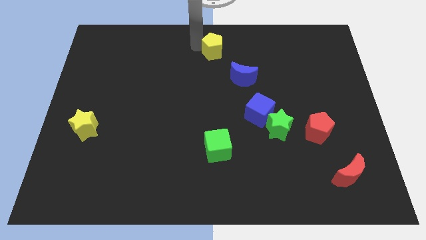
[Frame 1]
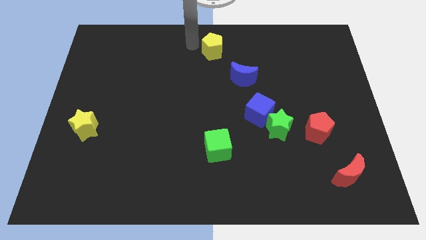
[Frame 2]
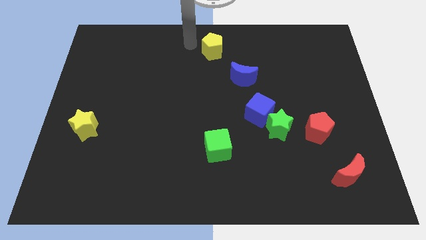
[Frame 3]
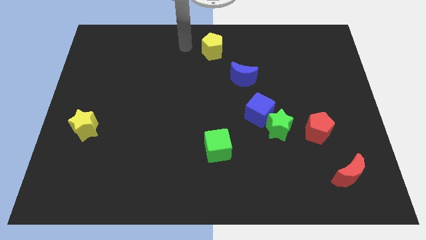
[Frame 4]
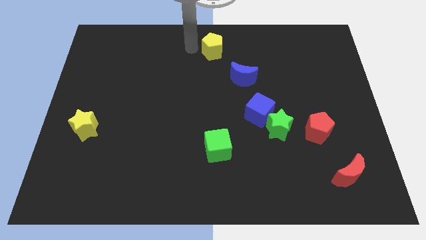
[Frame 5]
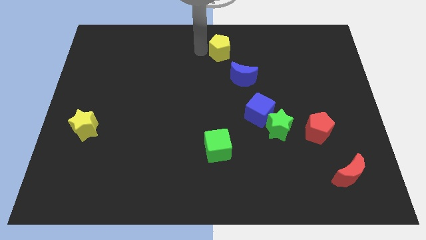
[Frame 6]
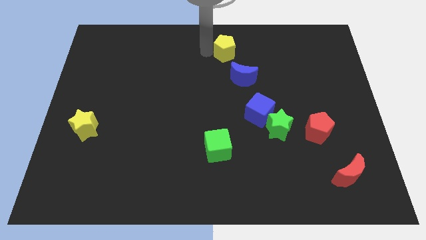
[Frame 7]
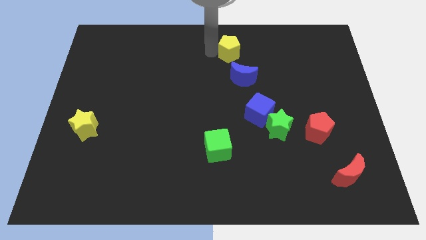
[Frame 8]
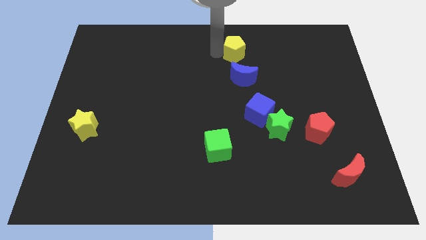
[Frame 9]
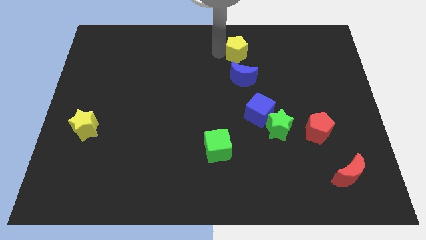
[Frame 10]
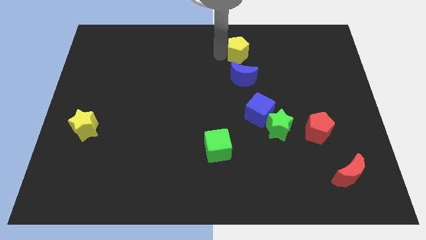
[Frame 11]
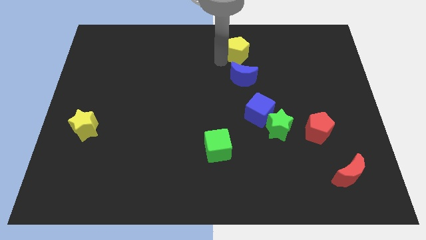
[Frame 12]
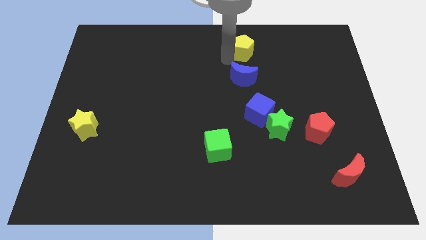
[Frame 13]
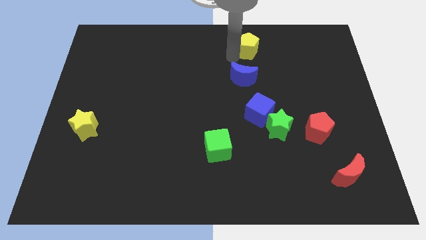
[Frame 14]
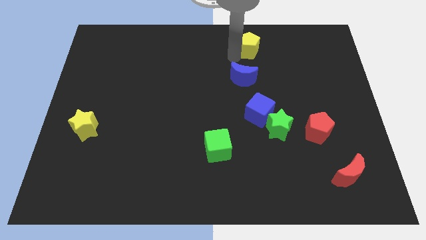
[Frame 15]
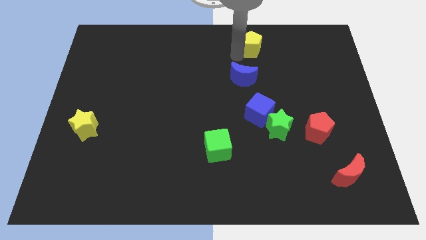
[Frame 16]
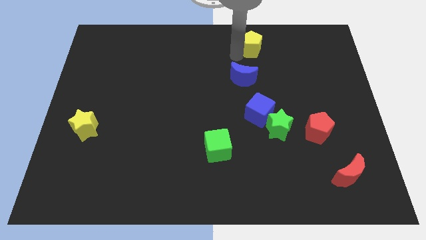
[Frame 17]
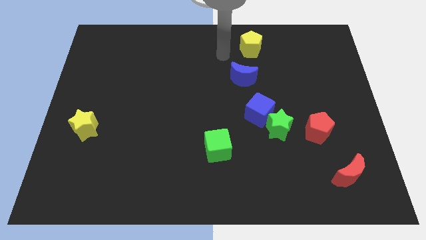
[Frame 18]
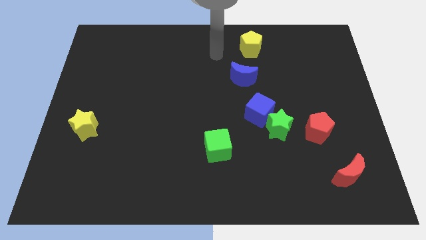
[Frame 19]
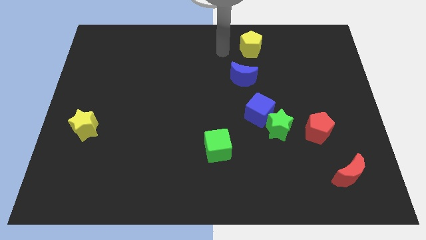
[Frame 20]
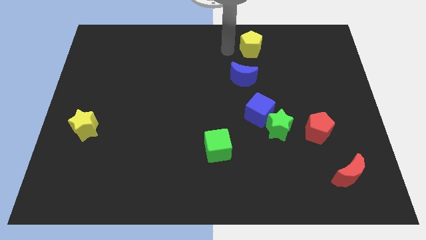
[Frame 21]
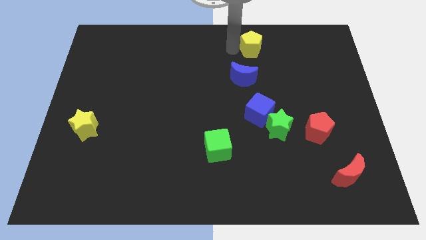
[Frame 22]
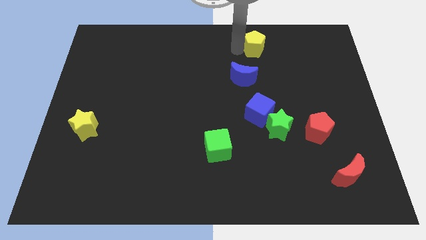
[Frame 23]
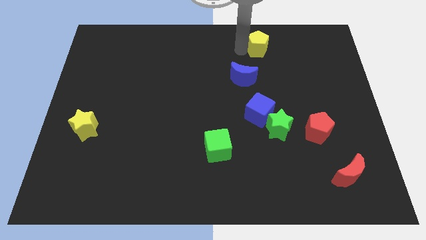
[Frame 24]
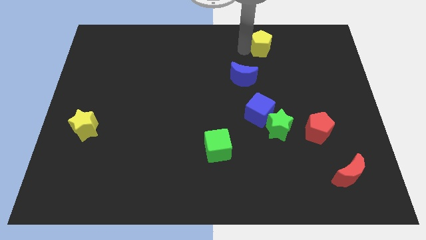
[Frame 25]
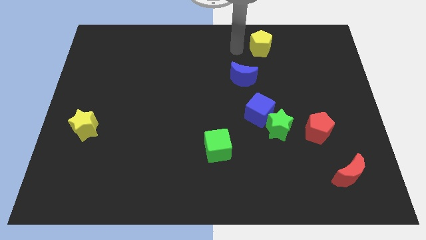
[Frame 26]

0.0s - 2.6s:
move the yellow pentagon towards the top right

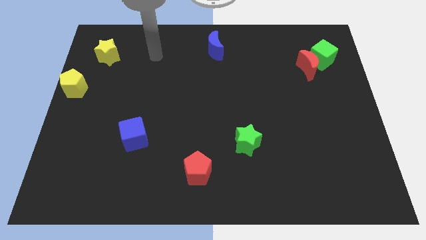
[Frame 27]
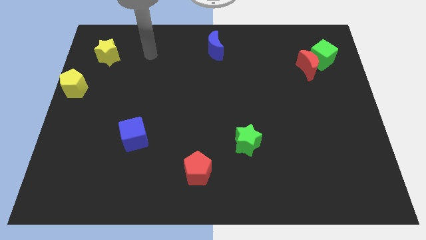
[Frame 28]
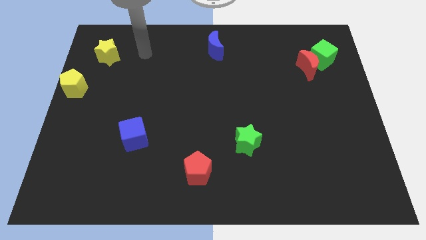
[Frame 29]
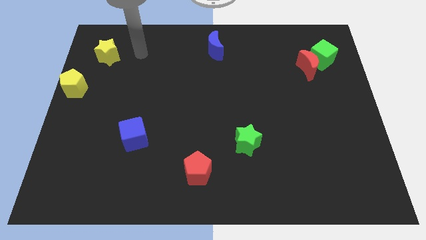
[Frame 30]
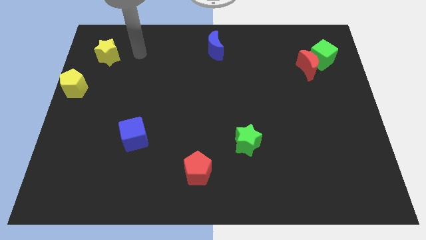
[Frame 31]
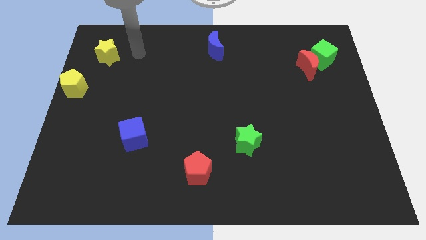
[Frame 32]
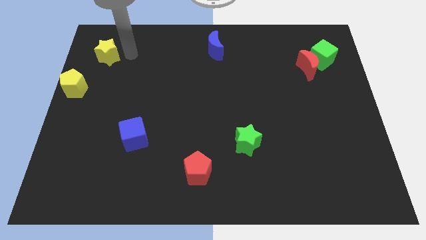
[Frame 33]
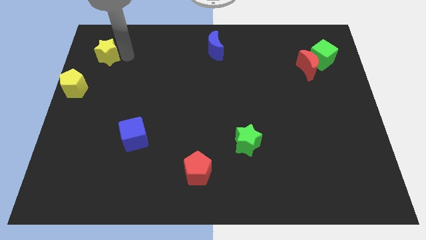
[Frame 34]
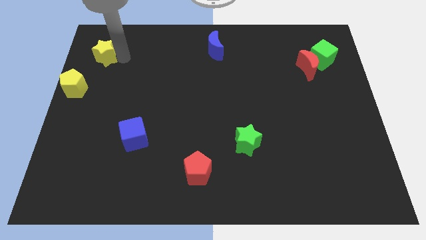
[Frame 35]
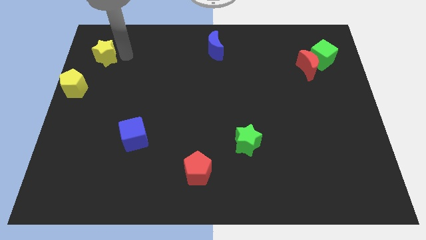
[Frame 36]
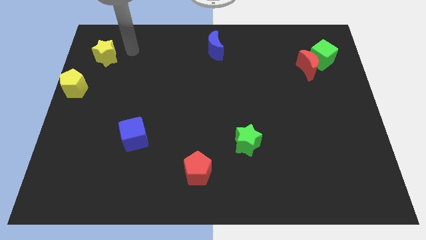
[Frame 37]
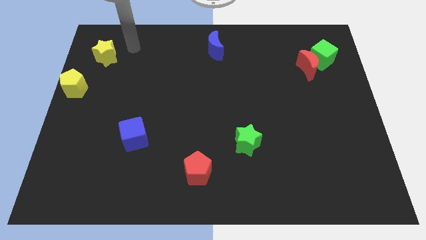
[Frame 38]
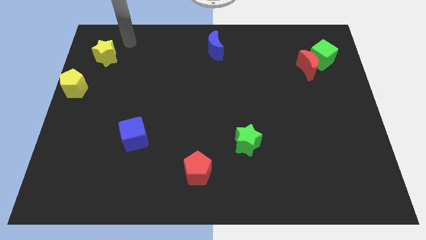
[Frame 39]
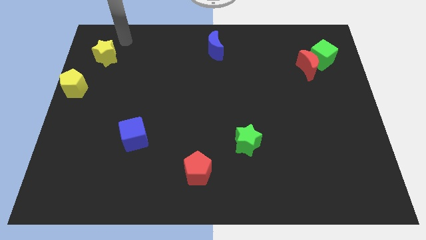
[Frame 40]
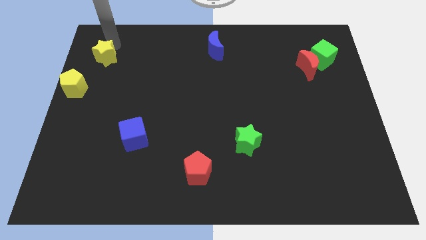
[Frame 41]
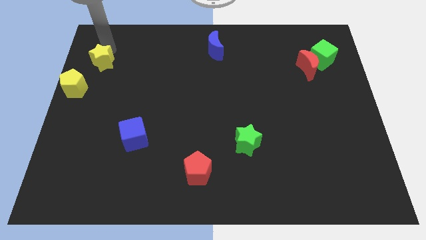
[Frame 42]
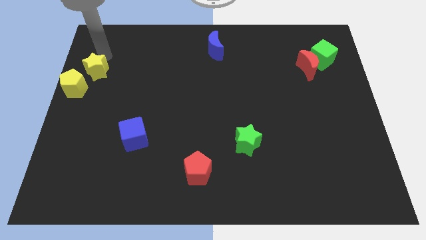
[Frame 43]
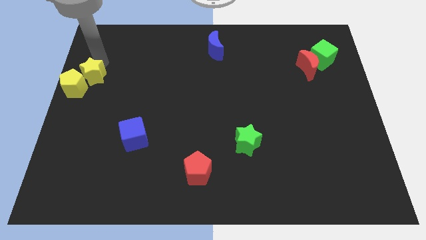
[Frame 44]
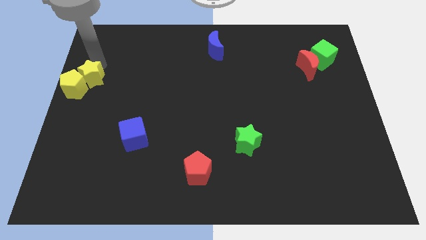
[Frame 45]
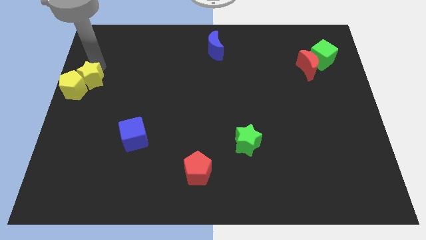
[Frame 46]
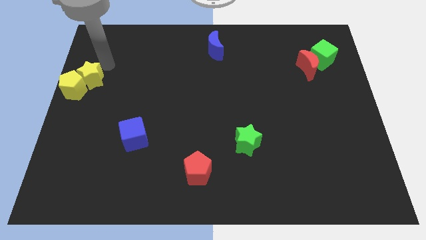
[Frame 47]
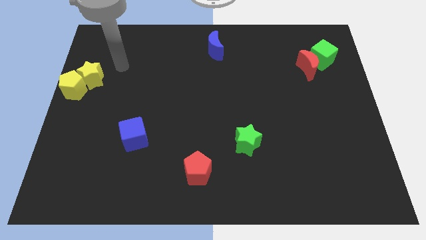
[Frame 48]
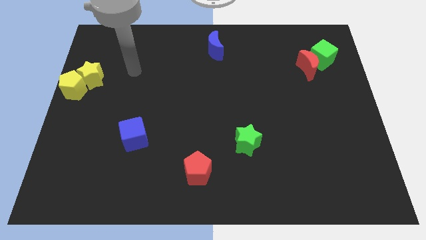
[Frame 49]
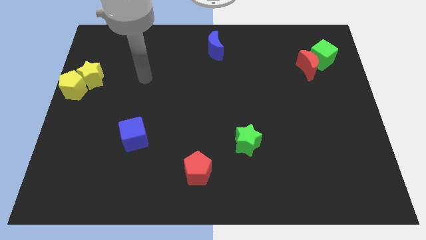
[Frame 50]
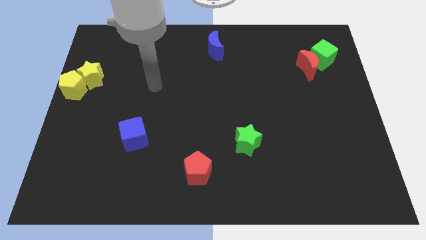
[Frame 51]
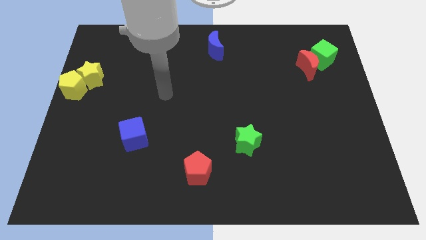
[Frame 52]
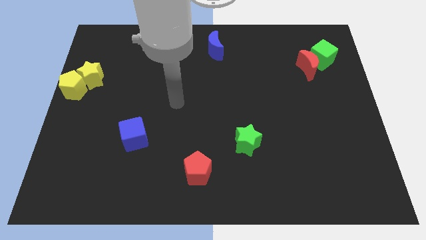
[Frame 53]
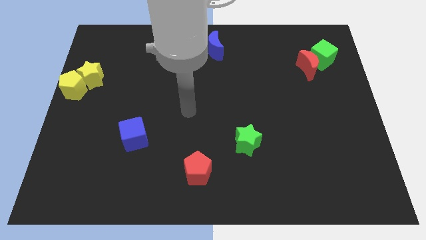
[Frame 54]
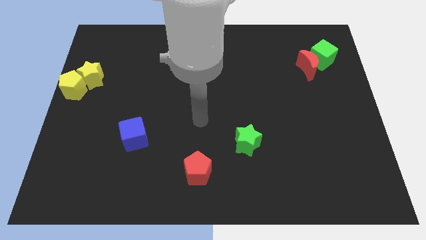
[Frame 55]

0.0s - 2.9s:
push yellow star into yellow pentagon

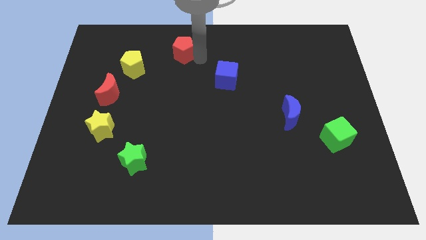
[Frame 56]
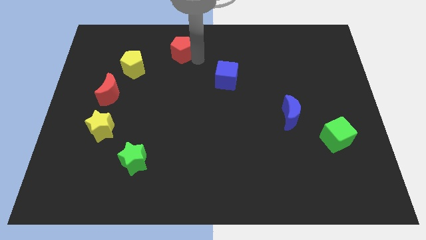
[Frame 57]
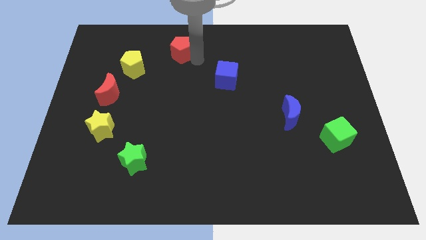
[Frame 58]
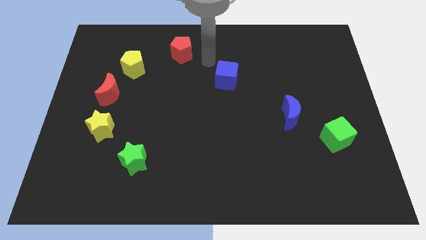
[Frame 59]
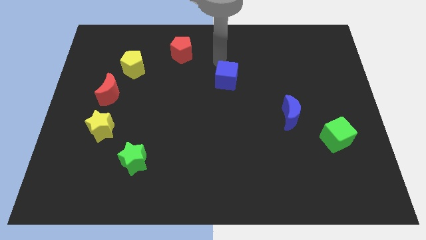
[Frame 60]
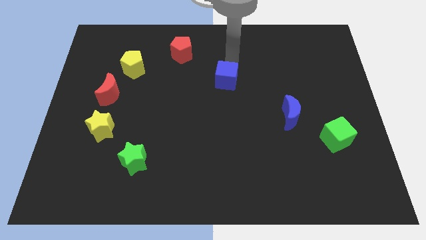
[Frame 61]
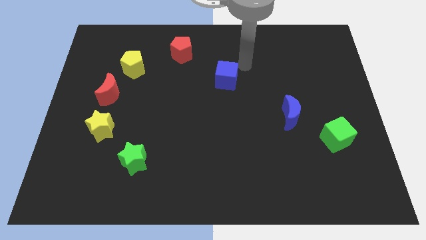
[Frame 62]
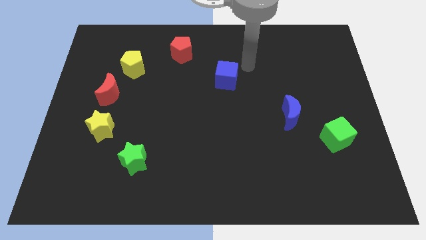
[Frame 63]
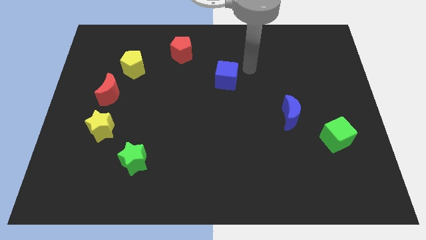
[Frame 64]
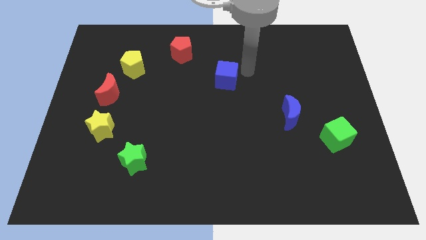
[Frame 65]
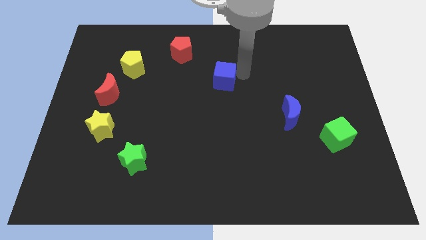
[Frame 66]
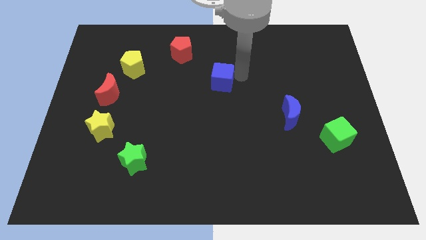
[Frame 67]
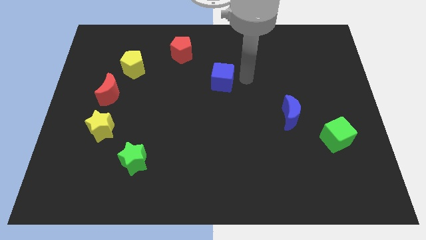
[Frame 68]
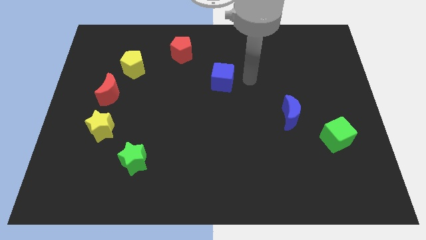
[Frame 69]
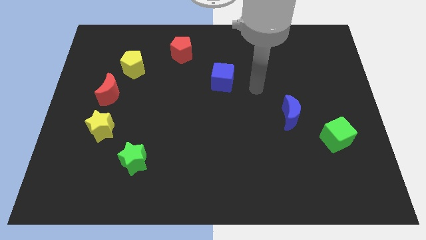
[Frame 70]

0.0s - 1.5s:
slightly touch the right side of blue cube

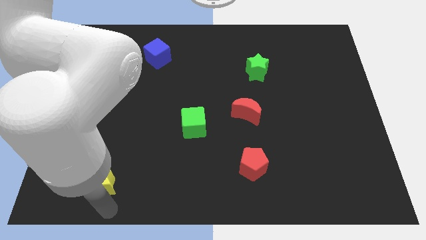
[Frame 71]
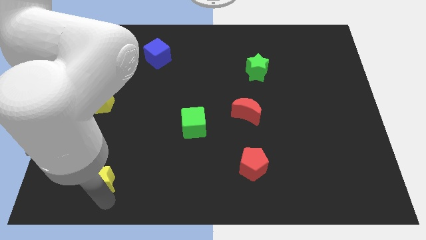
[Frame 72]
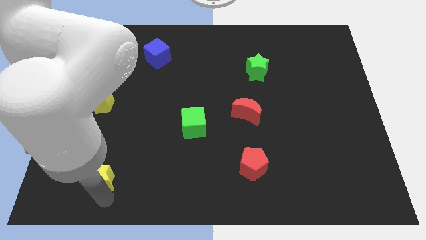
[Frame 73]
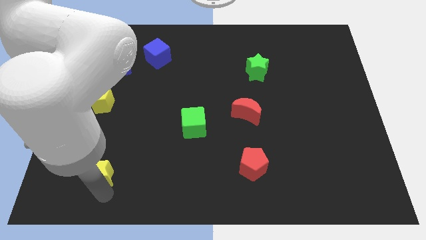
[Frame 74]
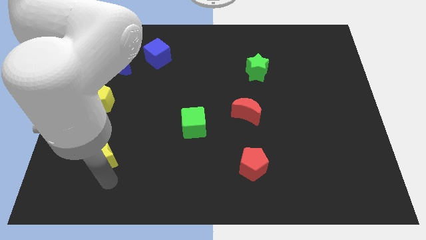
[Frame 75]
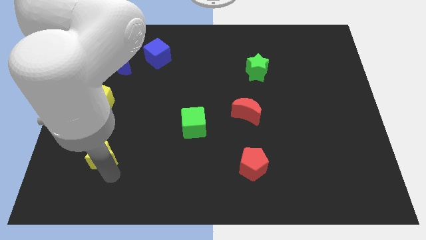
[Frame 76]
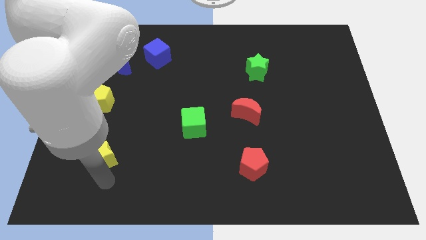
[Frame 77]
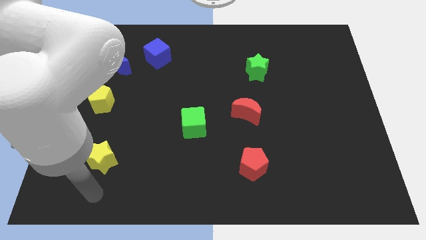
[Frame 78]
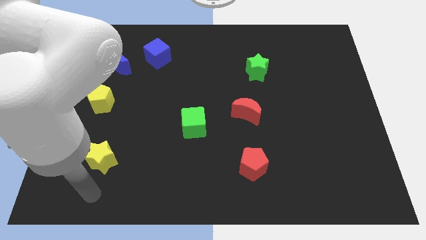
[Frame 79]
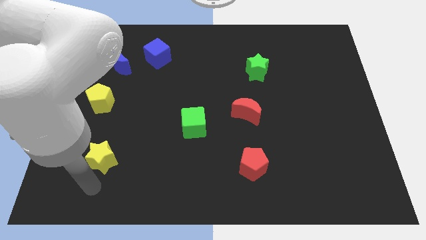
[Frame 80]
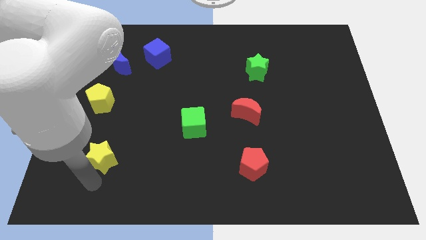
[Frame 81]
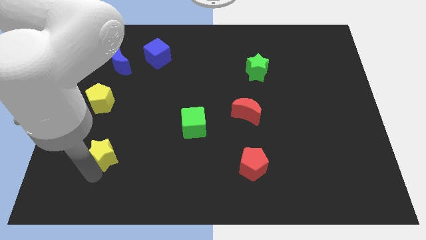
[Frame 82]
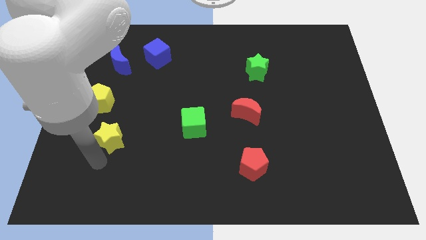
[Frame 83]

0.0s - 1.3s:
move the yellow star towards yellow pentagon

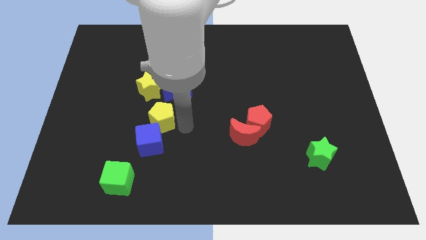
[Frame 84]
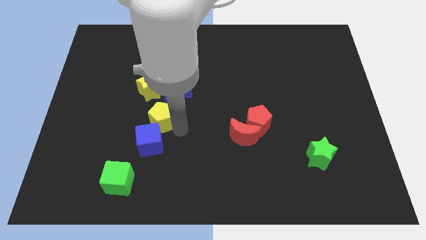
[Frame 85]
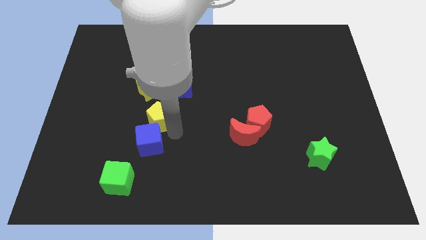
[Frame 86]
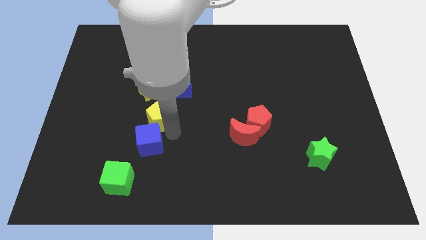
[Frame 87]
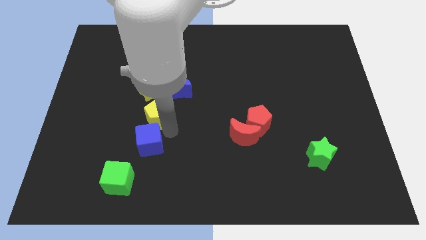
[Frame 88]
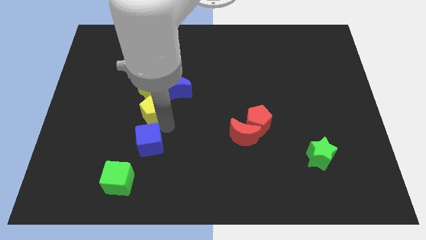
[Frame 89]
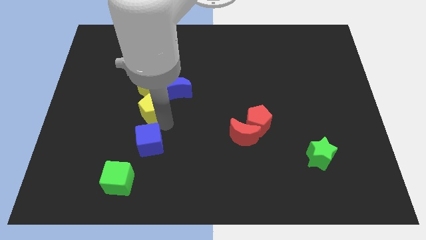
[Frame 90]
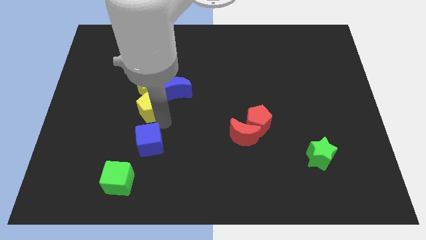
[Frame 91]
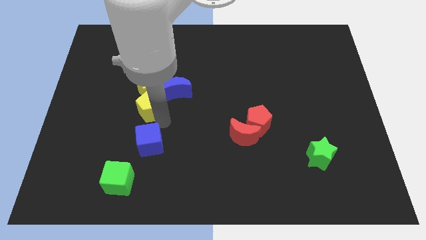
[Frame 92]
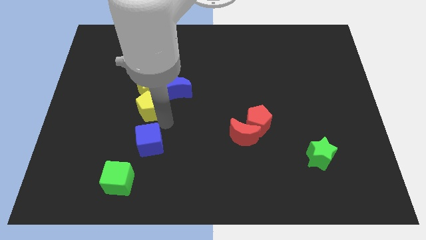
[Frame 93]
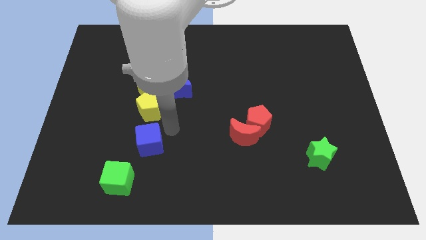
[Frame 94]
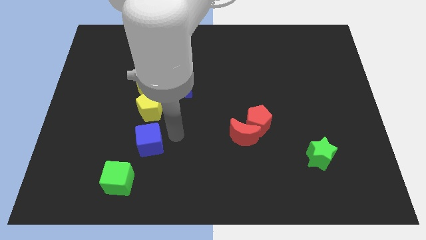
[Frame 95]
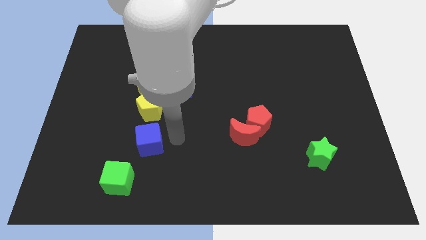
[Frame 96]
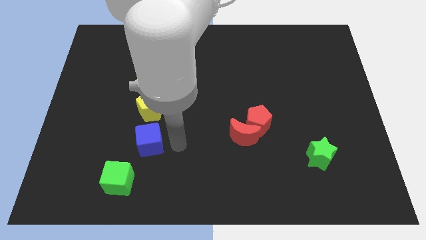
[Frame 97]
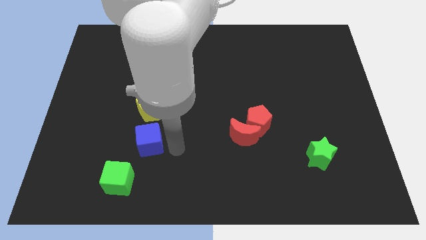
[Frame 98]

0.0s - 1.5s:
place yellow pentagon below the yellow star
